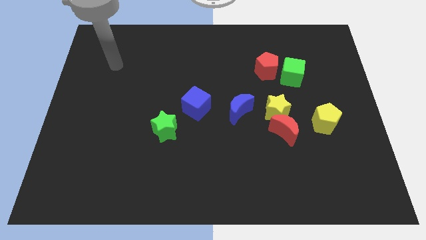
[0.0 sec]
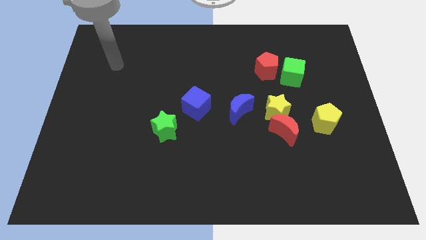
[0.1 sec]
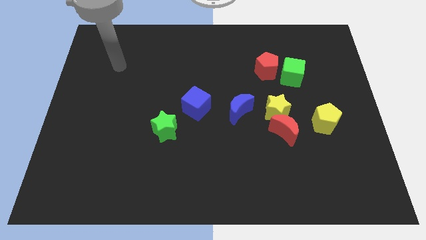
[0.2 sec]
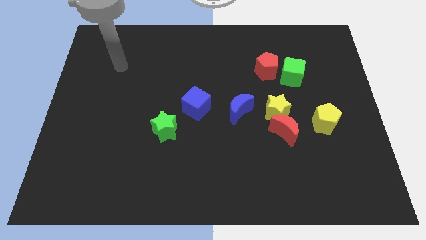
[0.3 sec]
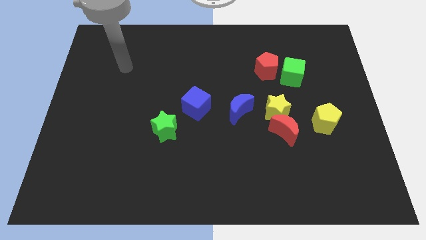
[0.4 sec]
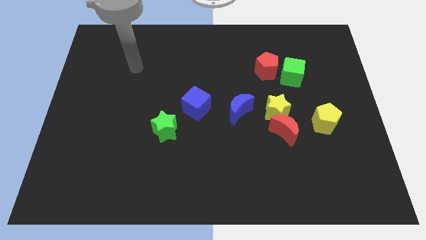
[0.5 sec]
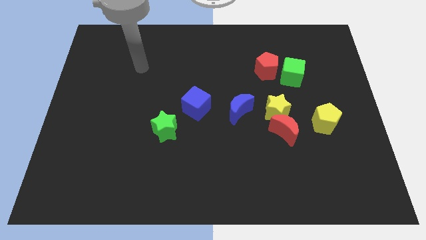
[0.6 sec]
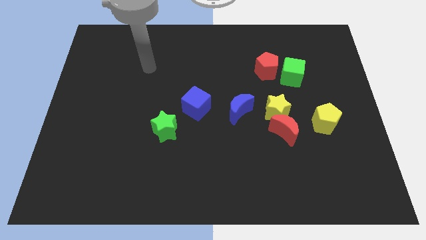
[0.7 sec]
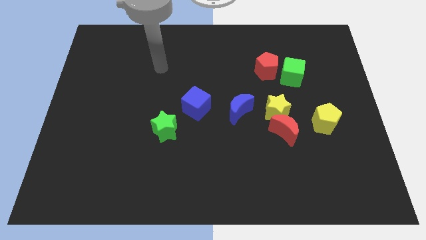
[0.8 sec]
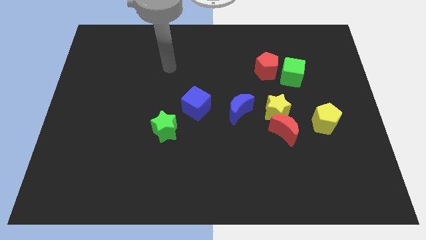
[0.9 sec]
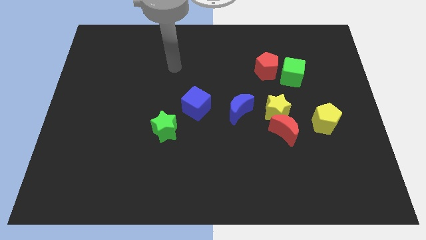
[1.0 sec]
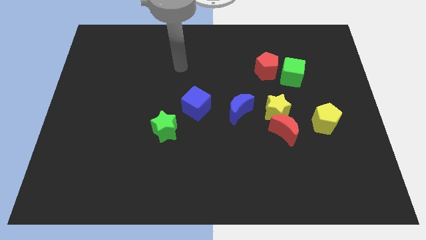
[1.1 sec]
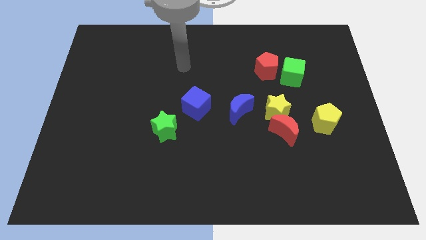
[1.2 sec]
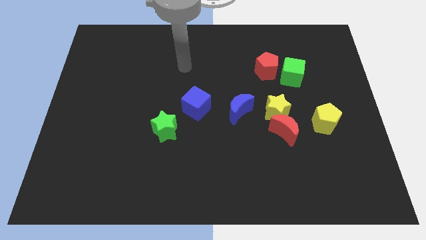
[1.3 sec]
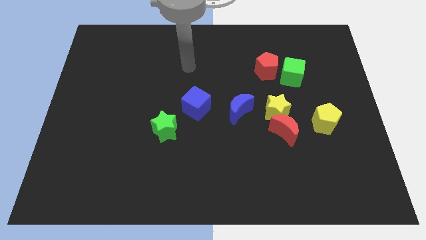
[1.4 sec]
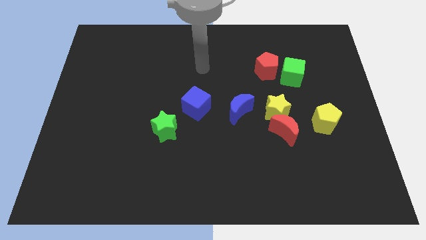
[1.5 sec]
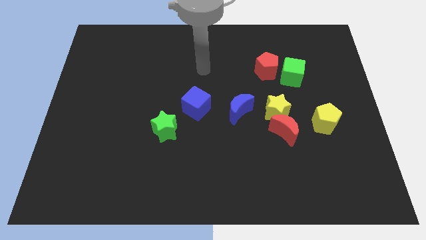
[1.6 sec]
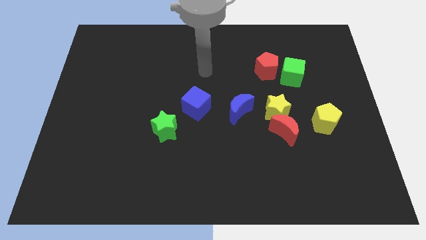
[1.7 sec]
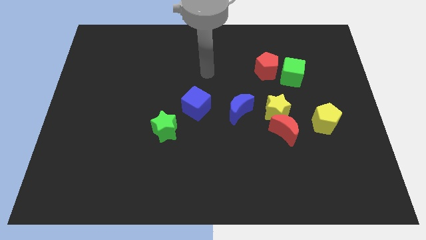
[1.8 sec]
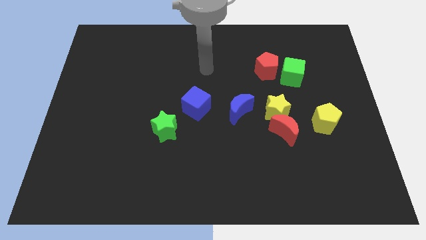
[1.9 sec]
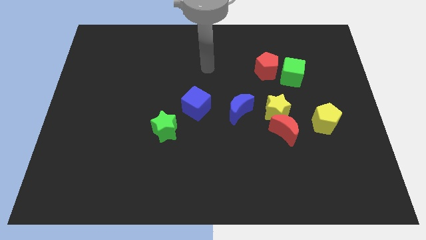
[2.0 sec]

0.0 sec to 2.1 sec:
move the arm towards the upside of the blue cube

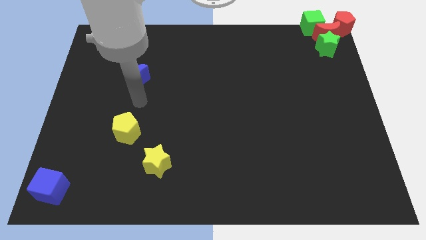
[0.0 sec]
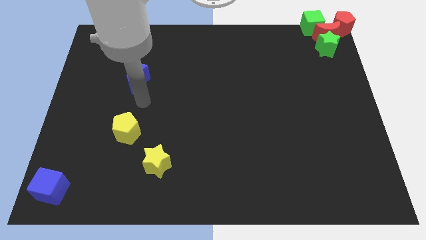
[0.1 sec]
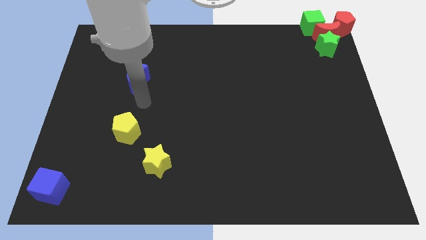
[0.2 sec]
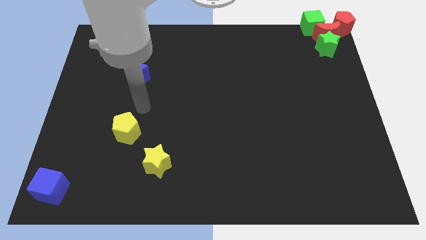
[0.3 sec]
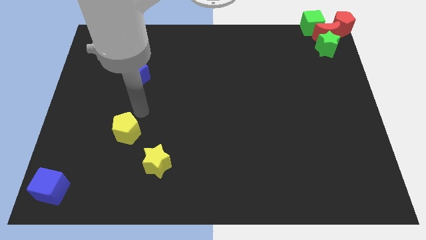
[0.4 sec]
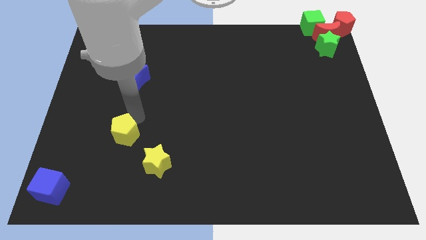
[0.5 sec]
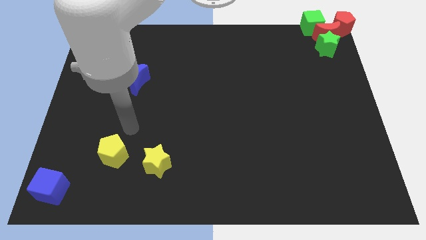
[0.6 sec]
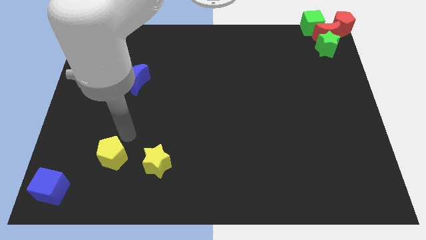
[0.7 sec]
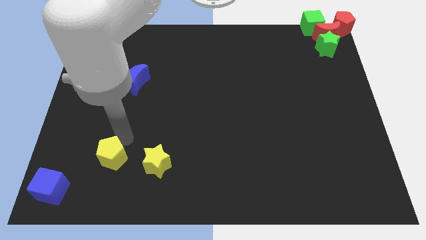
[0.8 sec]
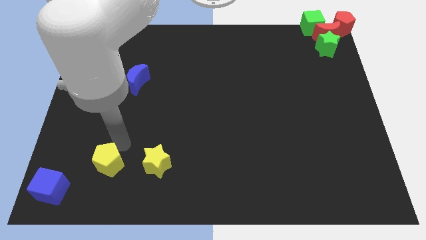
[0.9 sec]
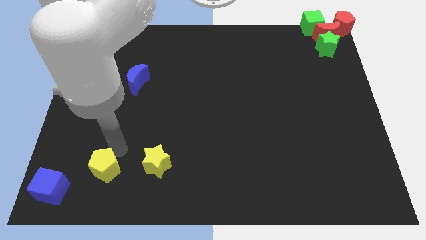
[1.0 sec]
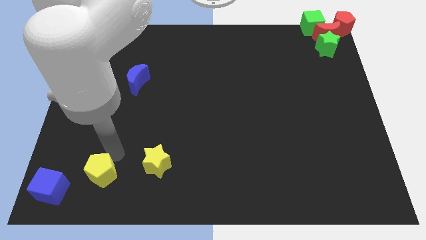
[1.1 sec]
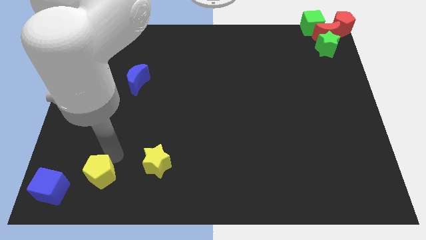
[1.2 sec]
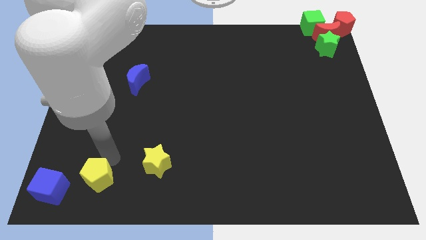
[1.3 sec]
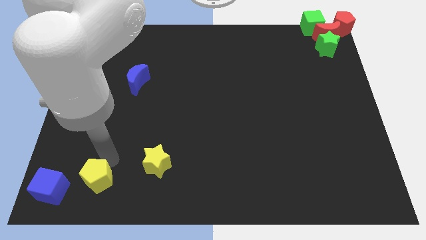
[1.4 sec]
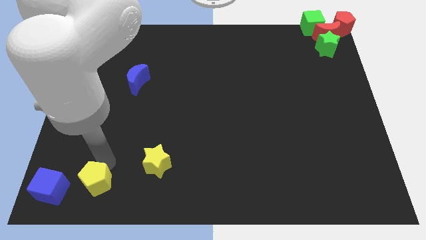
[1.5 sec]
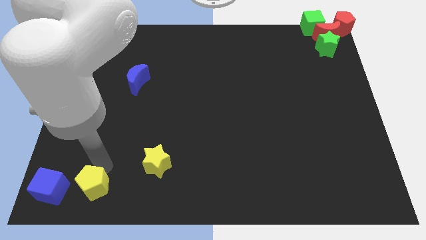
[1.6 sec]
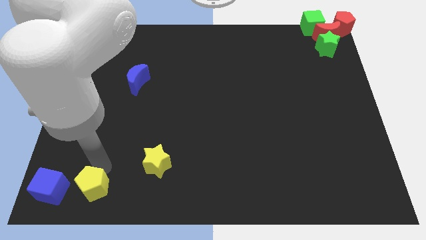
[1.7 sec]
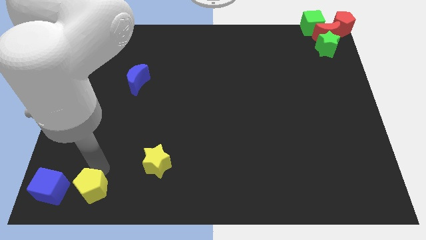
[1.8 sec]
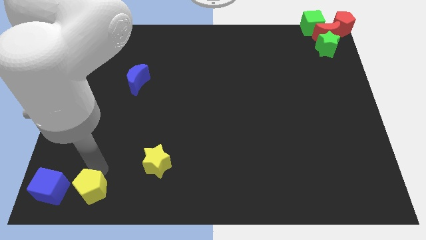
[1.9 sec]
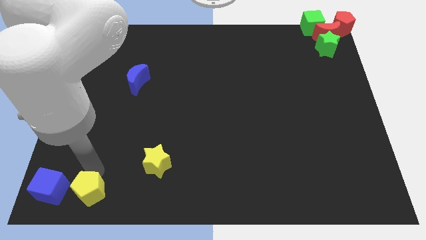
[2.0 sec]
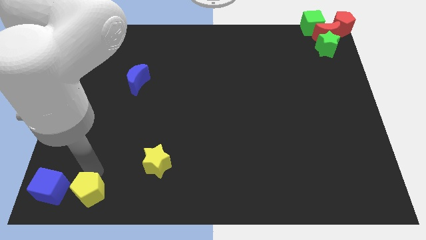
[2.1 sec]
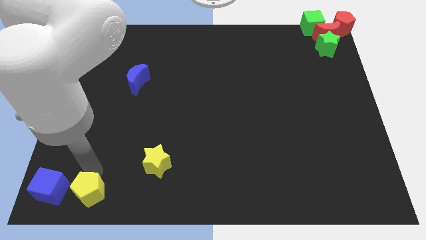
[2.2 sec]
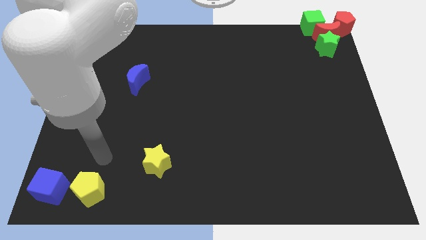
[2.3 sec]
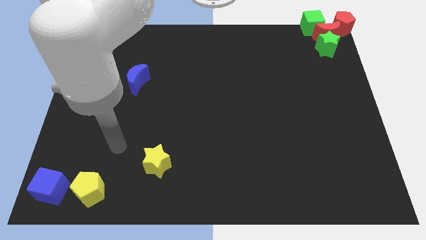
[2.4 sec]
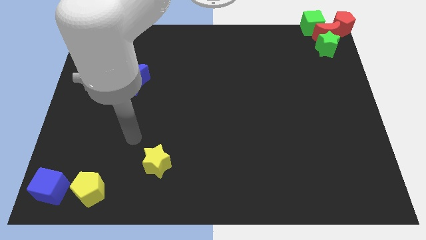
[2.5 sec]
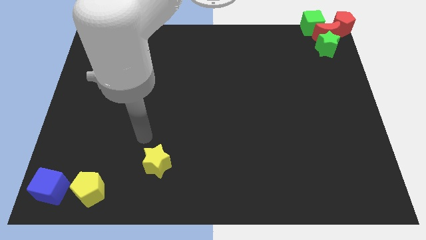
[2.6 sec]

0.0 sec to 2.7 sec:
move the yellow pentagon to the right of the blue cube

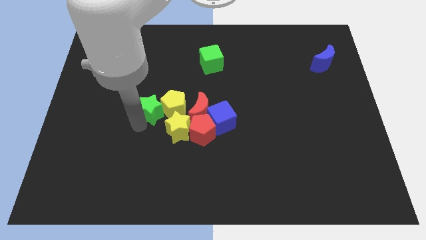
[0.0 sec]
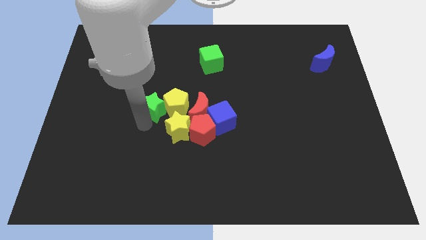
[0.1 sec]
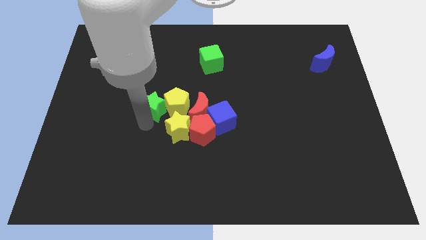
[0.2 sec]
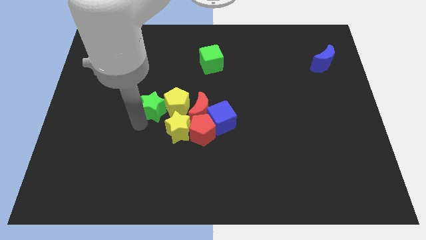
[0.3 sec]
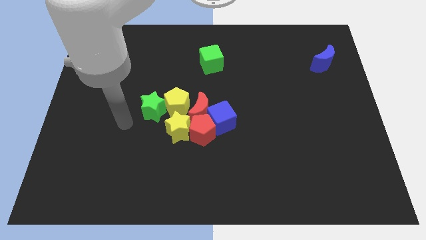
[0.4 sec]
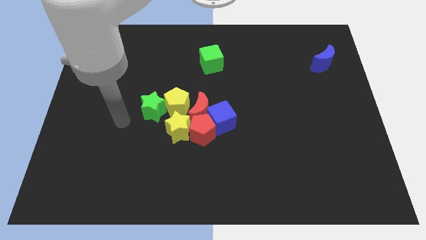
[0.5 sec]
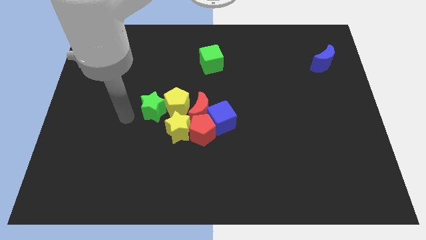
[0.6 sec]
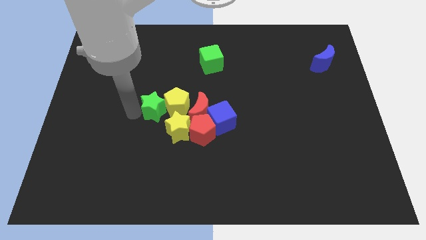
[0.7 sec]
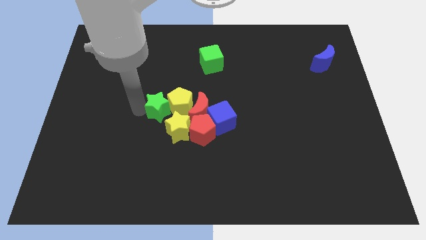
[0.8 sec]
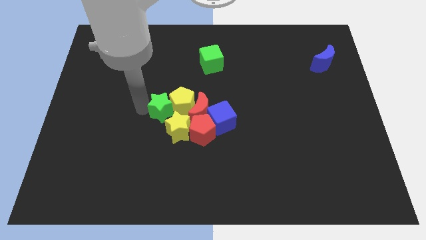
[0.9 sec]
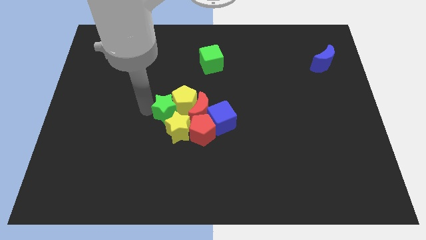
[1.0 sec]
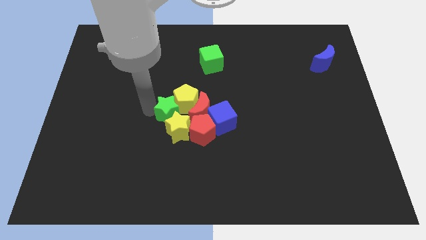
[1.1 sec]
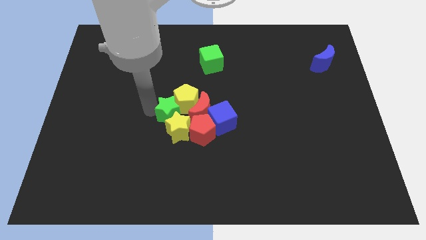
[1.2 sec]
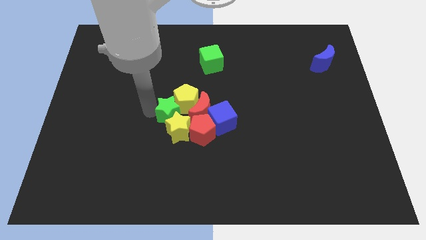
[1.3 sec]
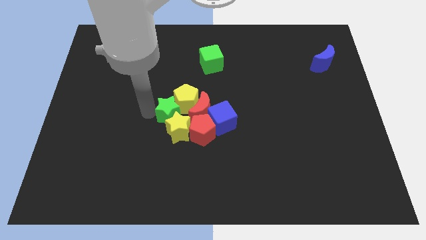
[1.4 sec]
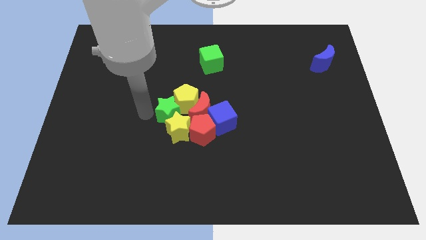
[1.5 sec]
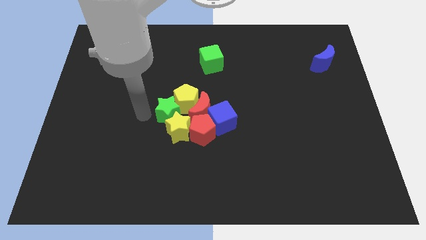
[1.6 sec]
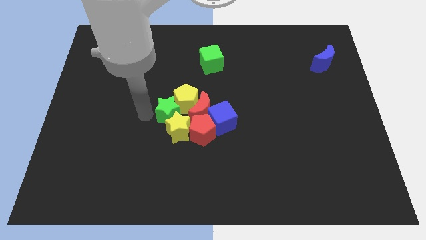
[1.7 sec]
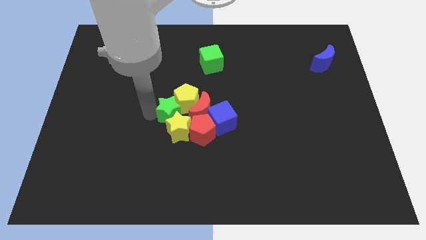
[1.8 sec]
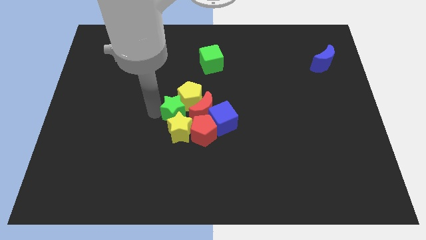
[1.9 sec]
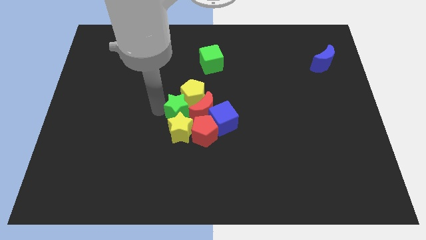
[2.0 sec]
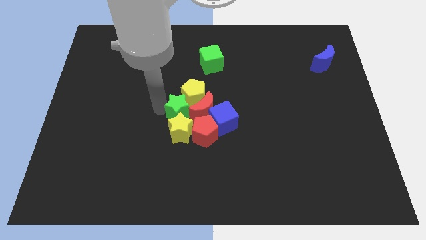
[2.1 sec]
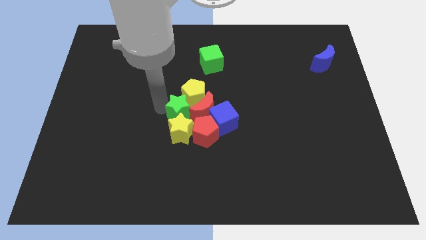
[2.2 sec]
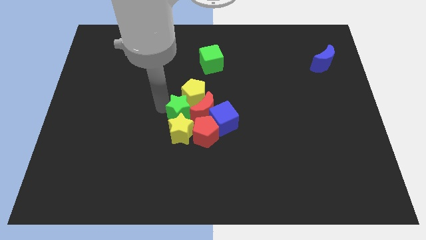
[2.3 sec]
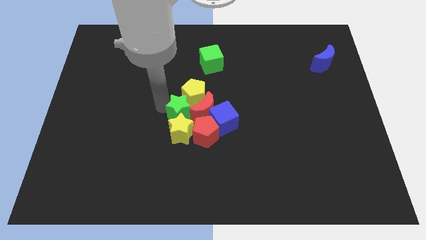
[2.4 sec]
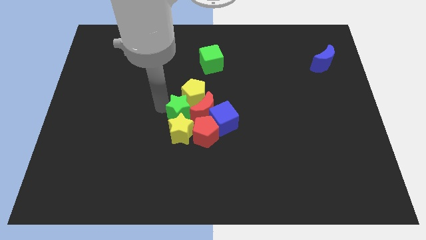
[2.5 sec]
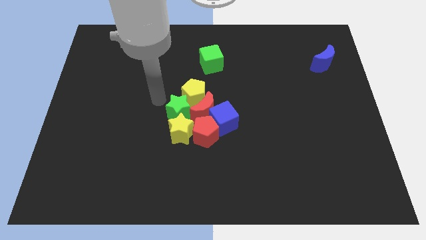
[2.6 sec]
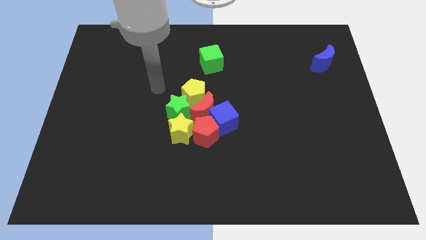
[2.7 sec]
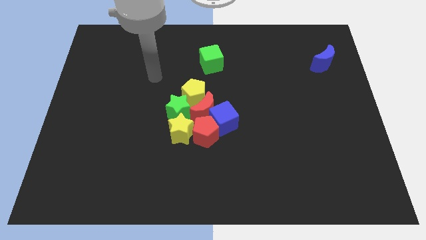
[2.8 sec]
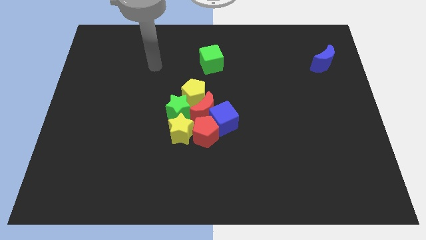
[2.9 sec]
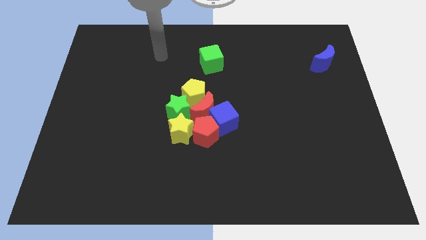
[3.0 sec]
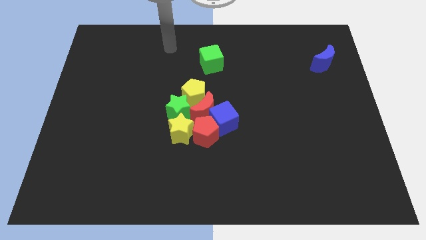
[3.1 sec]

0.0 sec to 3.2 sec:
move green star in between yellow blocks

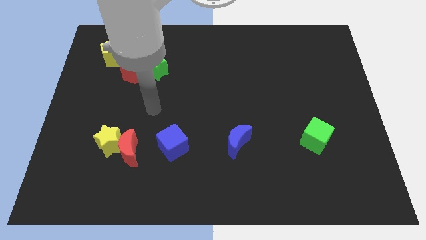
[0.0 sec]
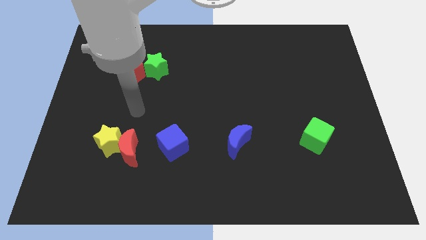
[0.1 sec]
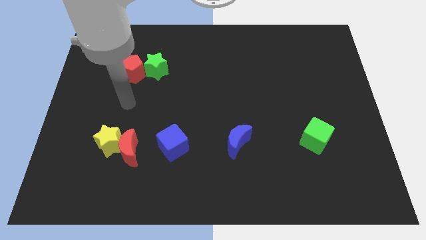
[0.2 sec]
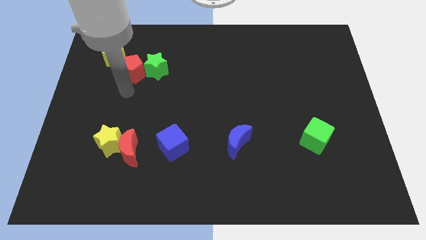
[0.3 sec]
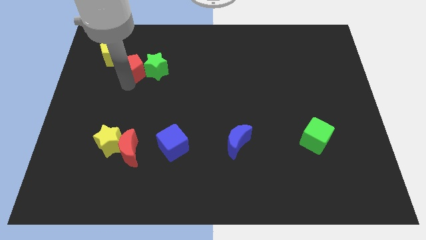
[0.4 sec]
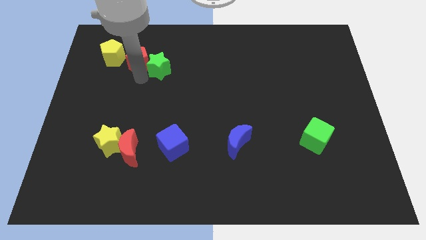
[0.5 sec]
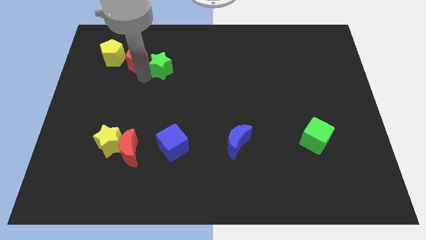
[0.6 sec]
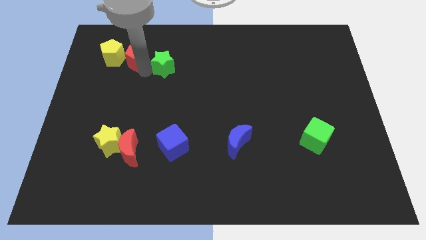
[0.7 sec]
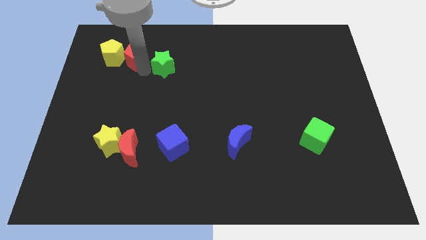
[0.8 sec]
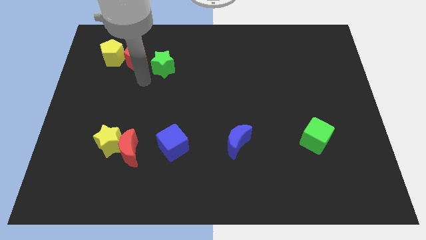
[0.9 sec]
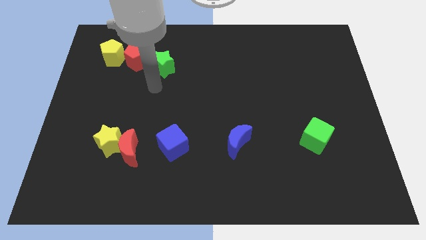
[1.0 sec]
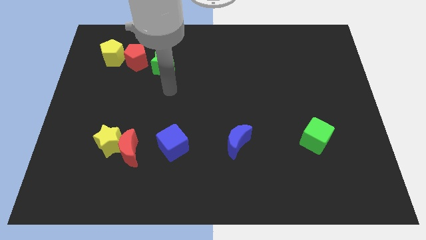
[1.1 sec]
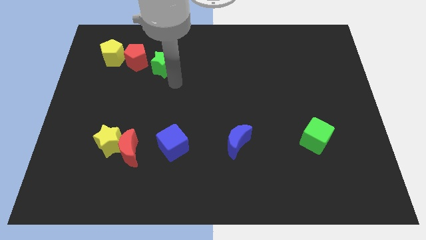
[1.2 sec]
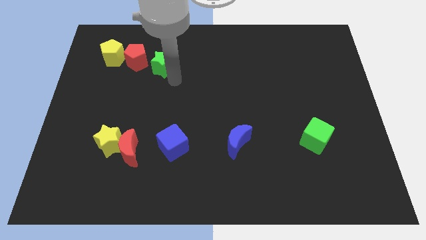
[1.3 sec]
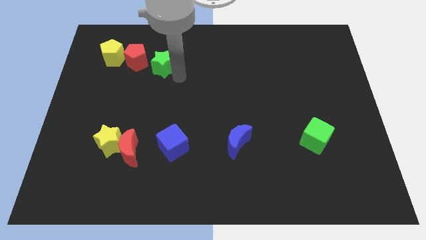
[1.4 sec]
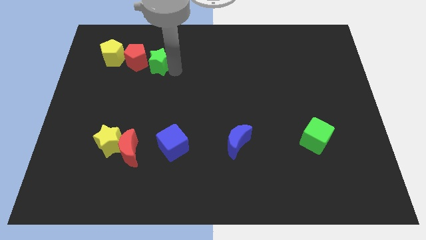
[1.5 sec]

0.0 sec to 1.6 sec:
separate red pentagon and green star
